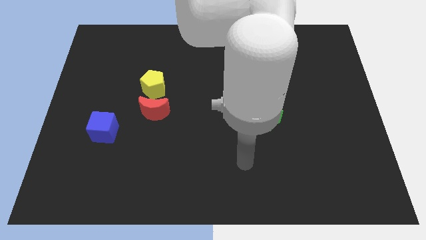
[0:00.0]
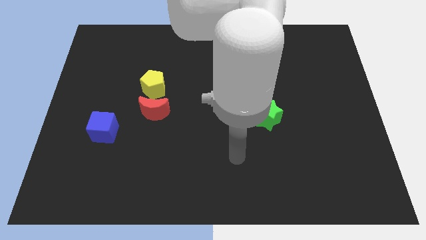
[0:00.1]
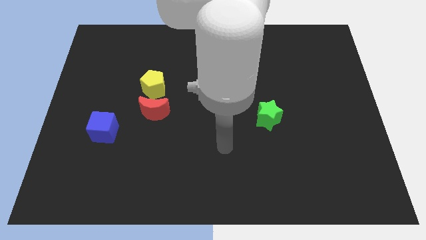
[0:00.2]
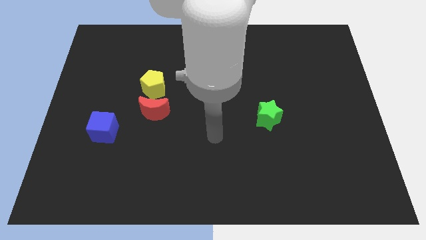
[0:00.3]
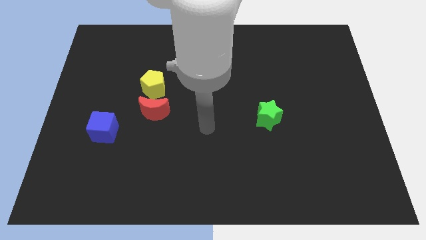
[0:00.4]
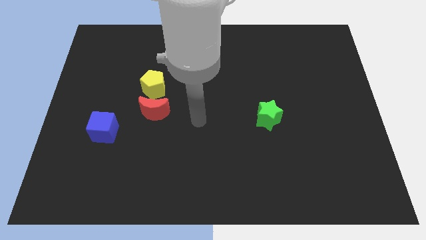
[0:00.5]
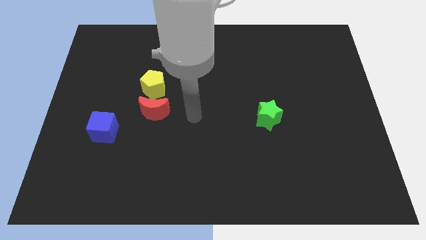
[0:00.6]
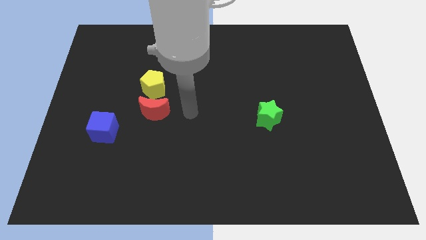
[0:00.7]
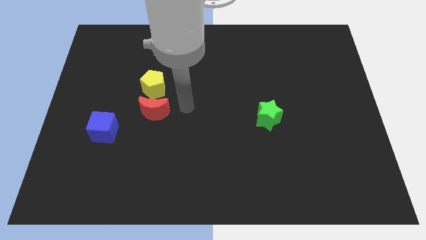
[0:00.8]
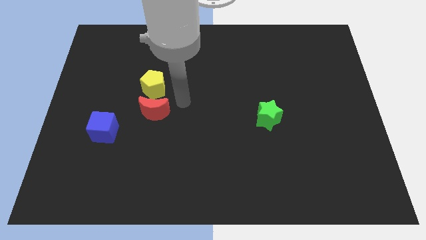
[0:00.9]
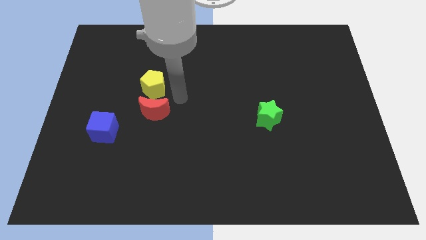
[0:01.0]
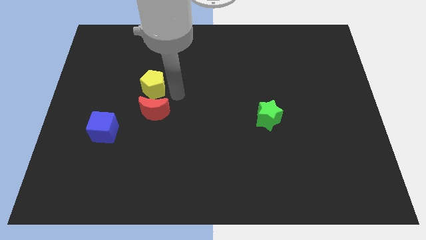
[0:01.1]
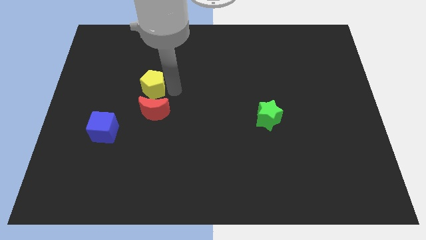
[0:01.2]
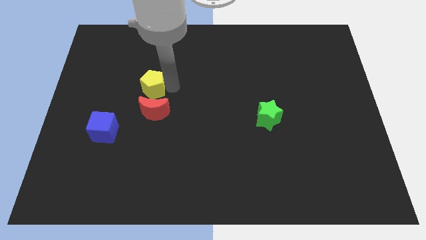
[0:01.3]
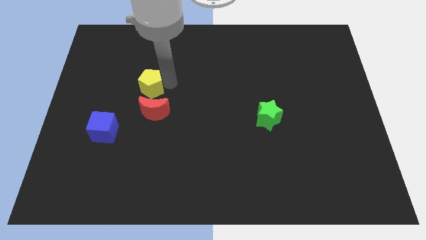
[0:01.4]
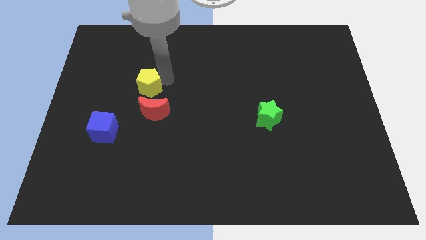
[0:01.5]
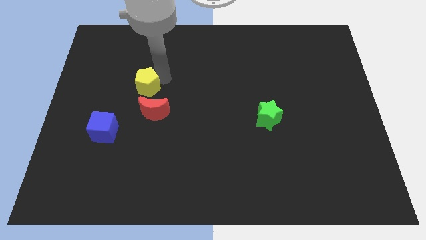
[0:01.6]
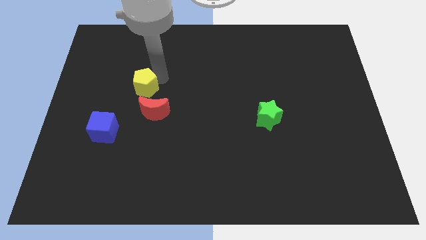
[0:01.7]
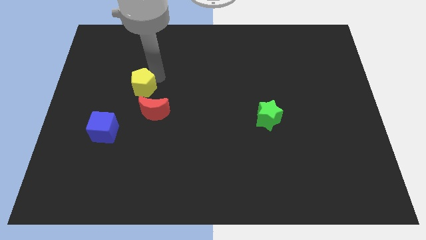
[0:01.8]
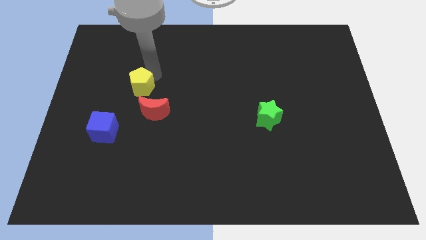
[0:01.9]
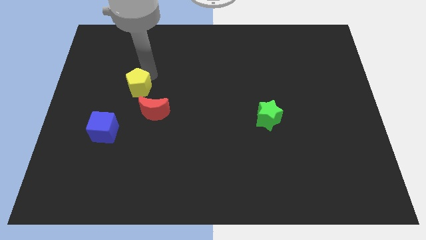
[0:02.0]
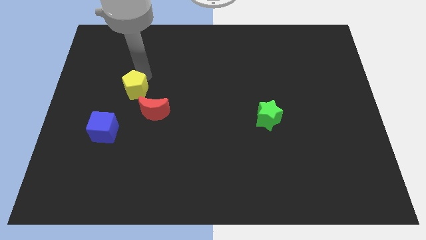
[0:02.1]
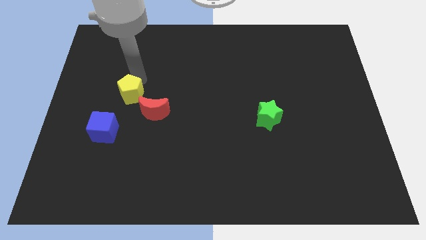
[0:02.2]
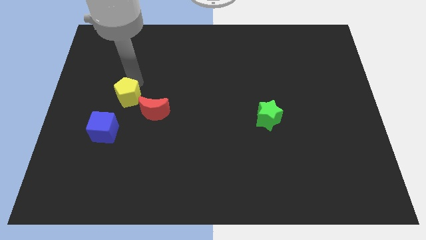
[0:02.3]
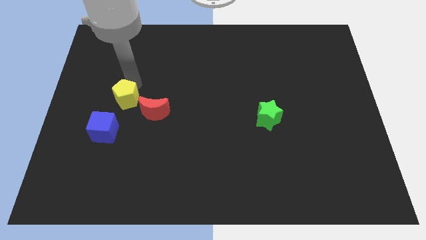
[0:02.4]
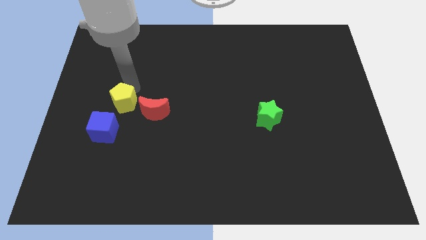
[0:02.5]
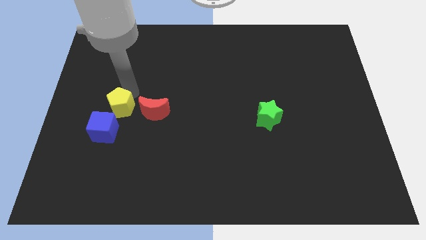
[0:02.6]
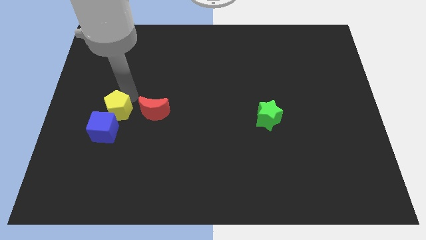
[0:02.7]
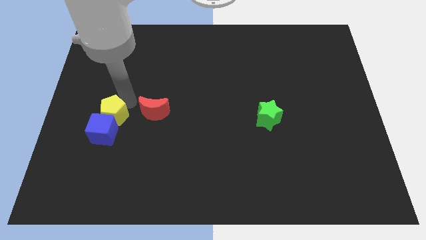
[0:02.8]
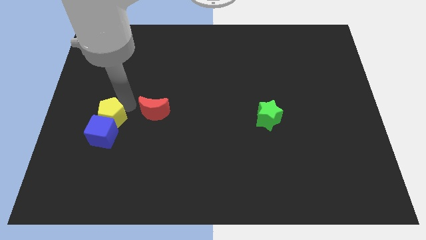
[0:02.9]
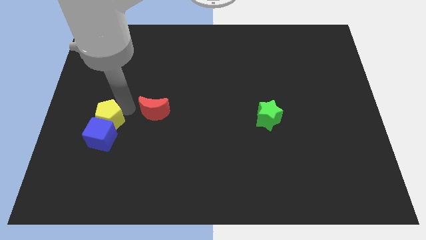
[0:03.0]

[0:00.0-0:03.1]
move the yellow block to the blue block

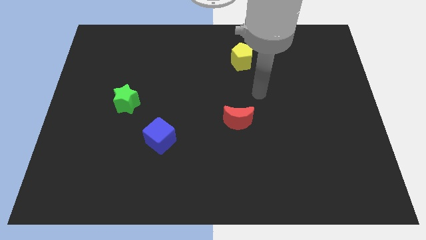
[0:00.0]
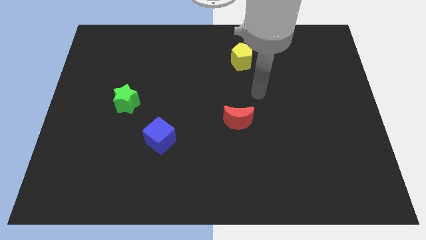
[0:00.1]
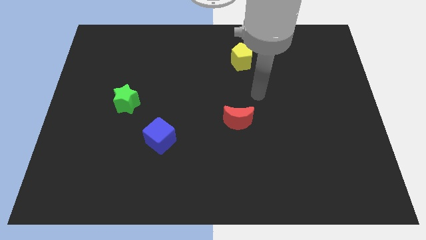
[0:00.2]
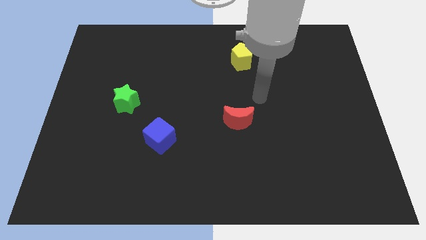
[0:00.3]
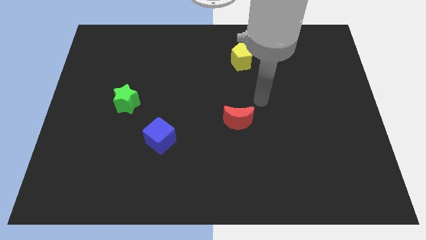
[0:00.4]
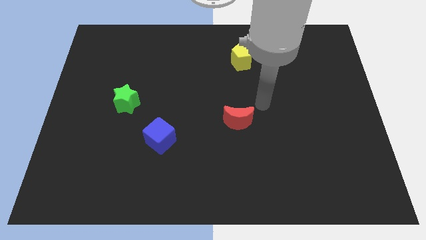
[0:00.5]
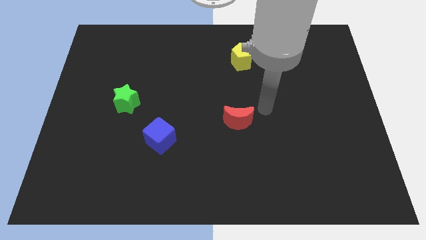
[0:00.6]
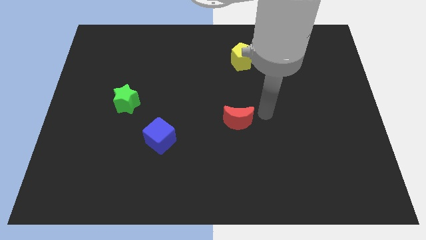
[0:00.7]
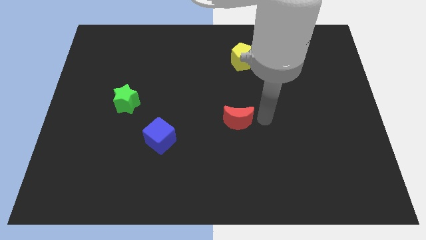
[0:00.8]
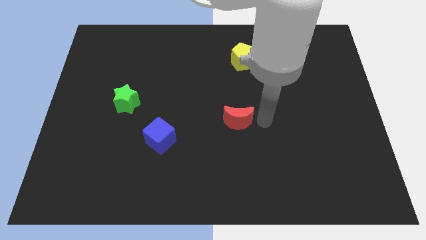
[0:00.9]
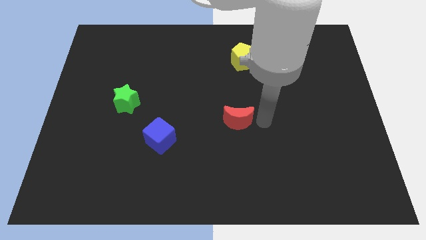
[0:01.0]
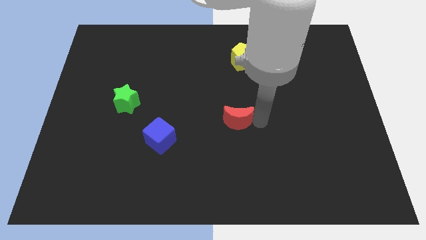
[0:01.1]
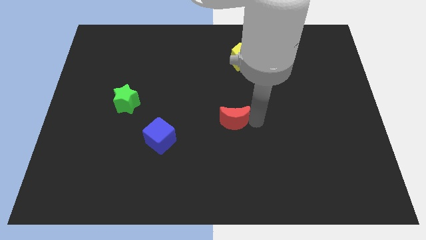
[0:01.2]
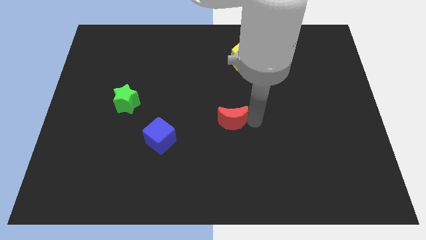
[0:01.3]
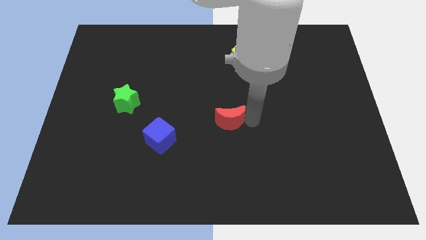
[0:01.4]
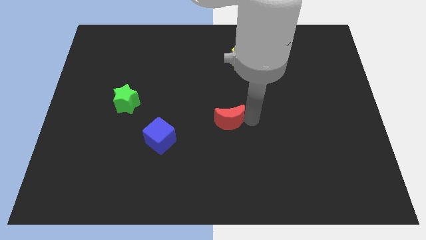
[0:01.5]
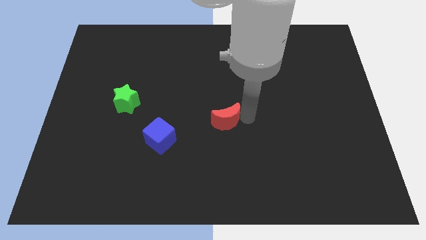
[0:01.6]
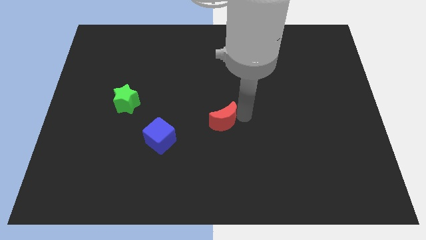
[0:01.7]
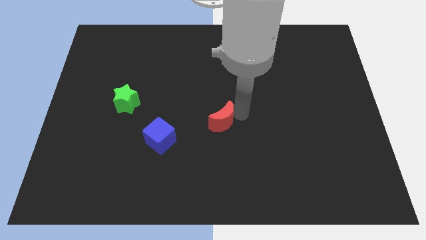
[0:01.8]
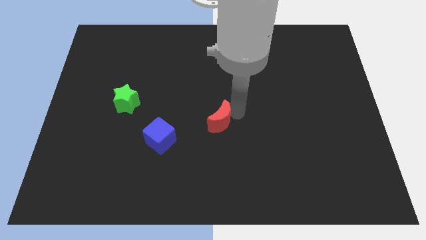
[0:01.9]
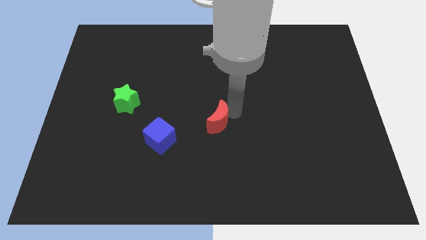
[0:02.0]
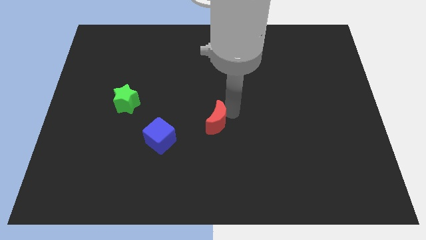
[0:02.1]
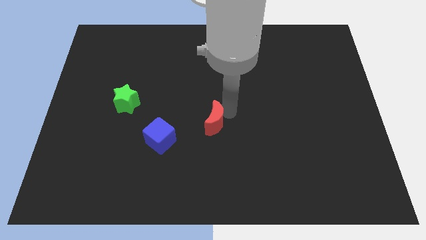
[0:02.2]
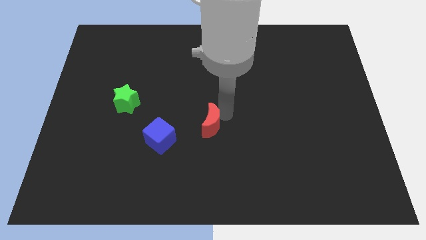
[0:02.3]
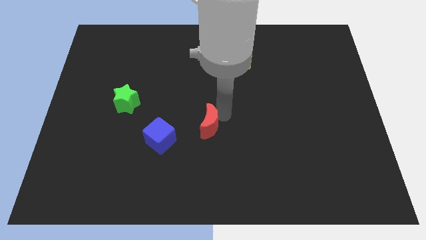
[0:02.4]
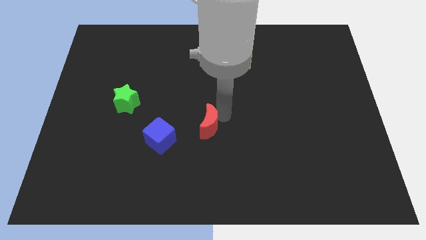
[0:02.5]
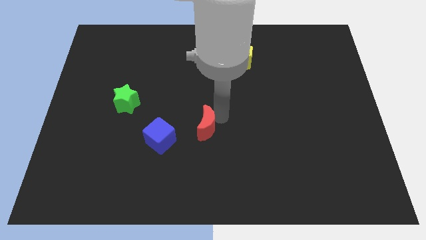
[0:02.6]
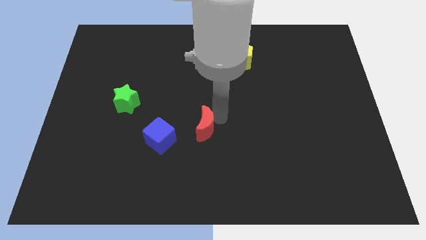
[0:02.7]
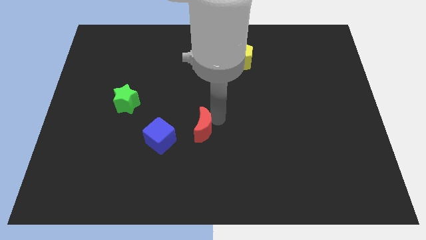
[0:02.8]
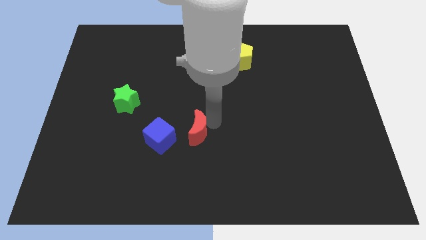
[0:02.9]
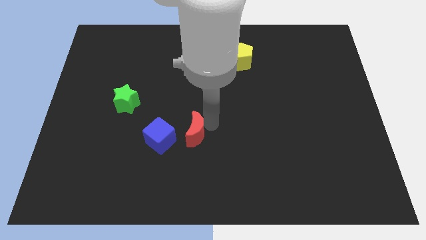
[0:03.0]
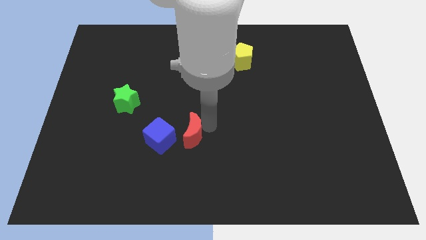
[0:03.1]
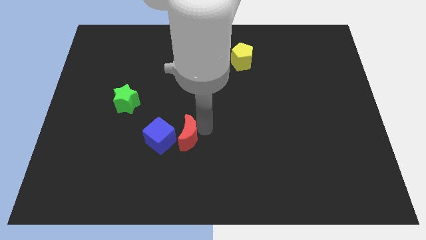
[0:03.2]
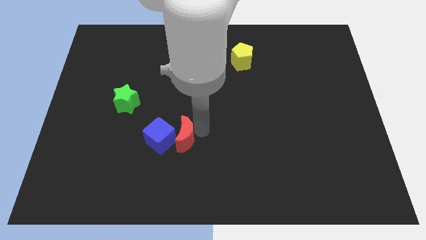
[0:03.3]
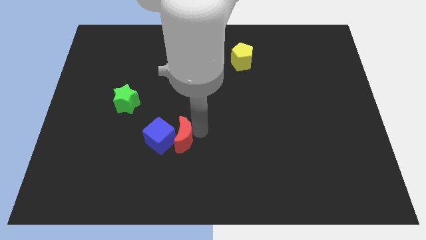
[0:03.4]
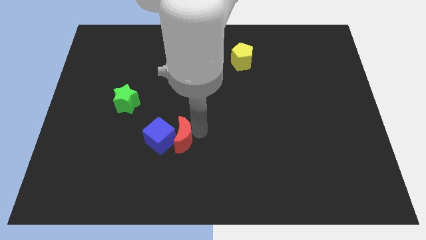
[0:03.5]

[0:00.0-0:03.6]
push the moon towards the blue block

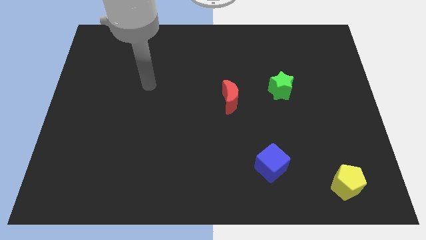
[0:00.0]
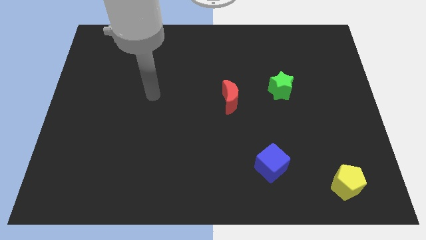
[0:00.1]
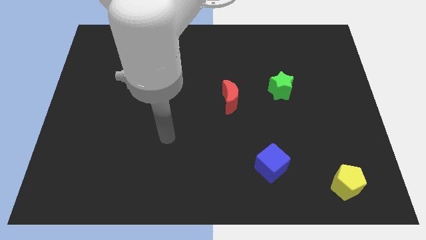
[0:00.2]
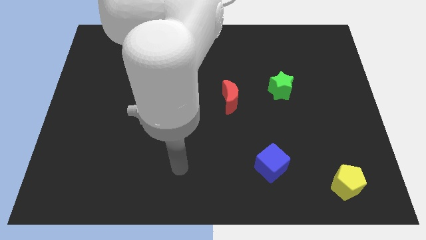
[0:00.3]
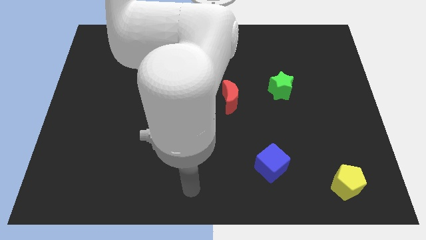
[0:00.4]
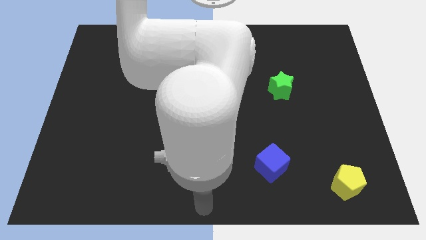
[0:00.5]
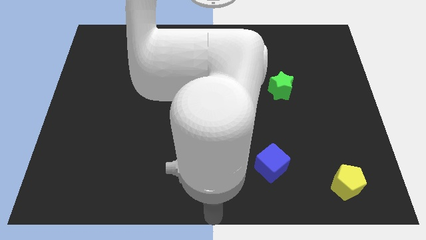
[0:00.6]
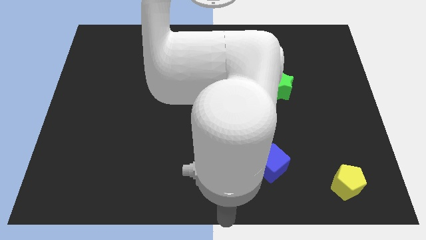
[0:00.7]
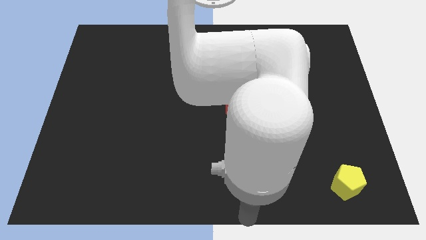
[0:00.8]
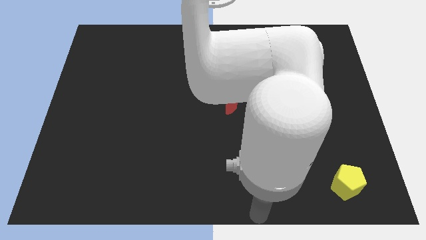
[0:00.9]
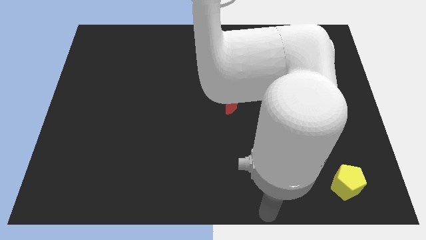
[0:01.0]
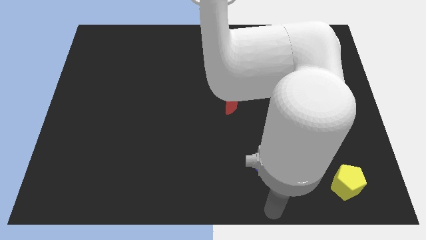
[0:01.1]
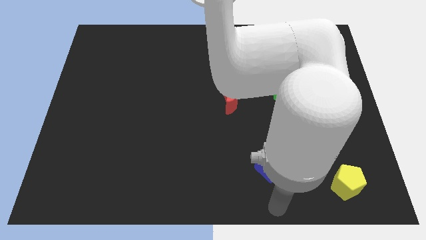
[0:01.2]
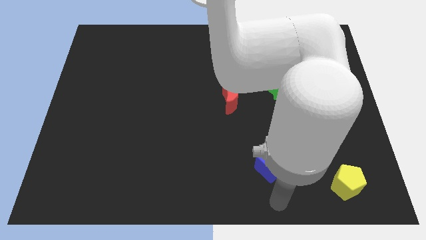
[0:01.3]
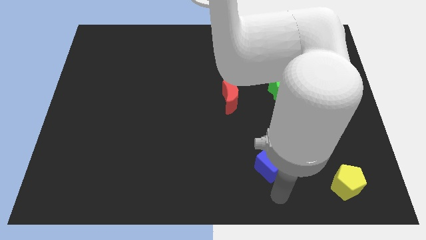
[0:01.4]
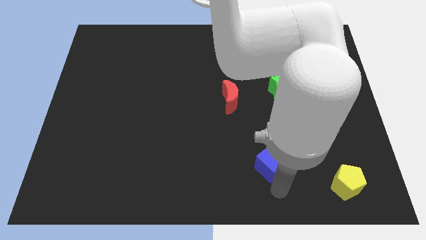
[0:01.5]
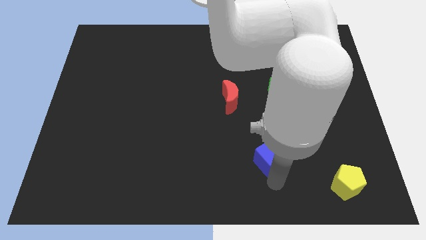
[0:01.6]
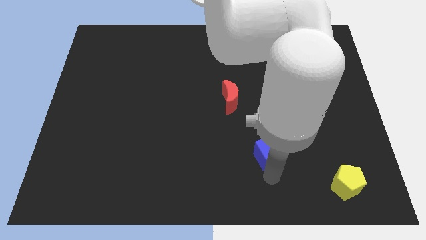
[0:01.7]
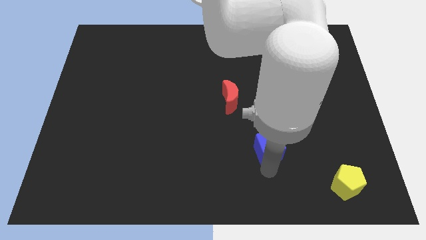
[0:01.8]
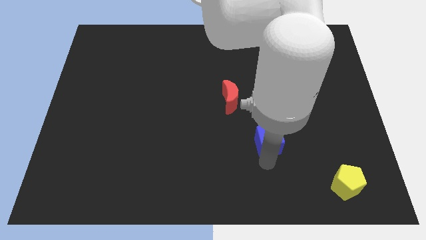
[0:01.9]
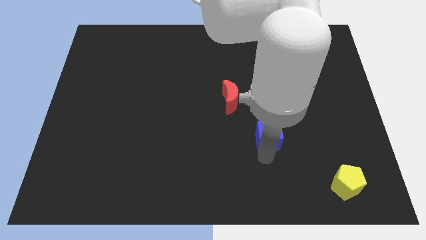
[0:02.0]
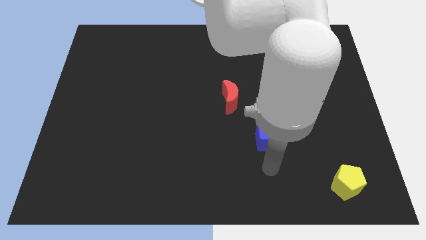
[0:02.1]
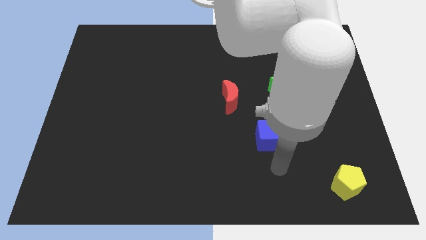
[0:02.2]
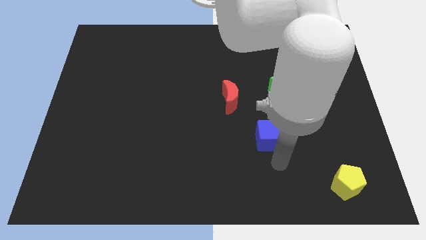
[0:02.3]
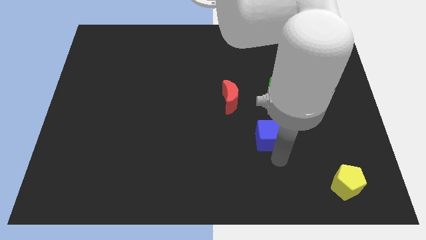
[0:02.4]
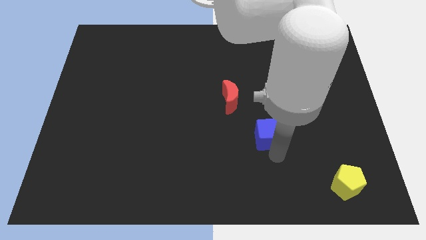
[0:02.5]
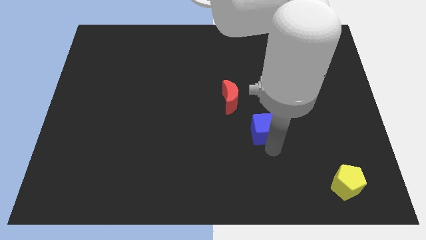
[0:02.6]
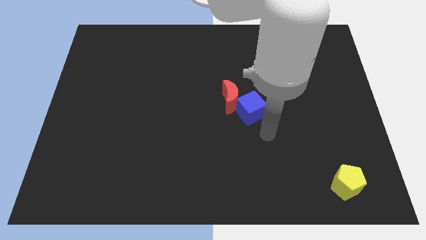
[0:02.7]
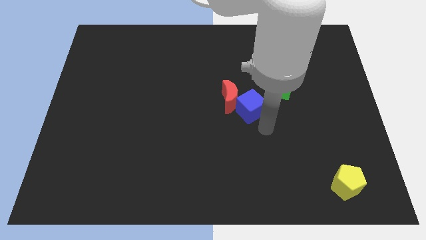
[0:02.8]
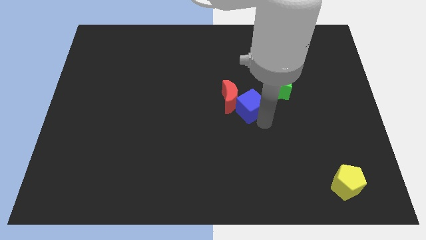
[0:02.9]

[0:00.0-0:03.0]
push the cube next to the red moon
